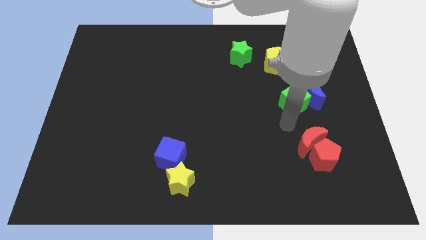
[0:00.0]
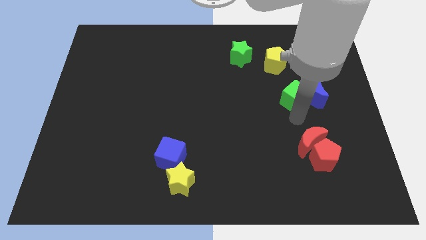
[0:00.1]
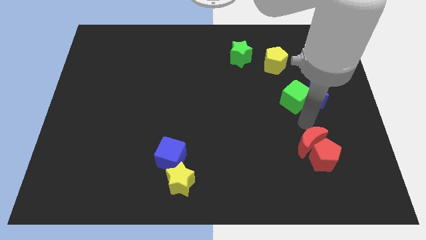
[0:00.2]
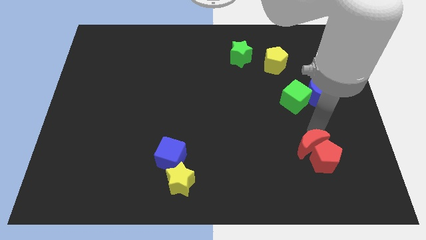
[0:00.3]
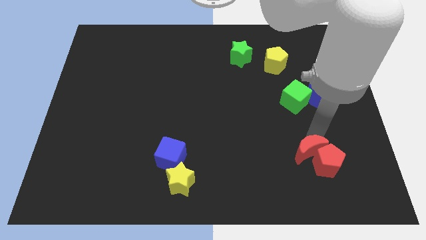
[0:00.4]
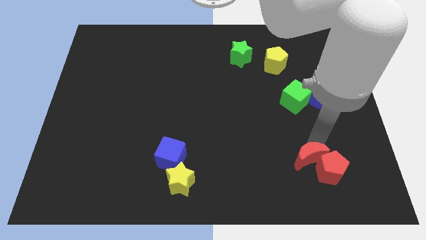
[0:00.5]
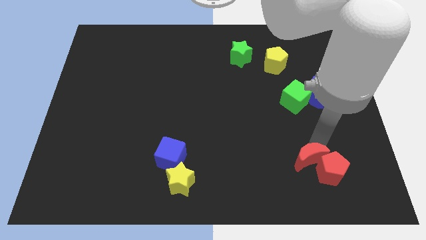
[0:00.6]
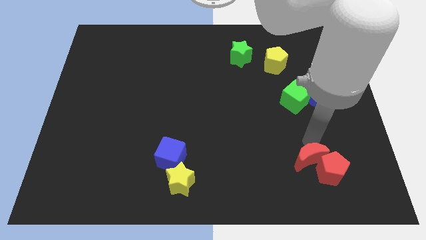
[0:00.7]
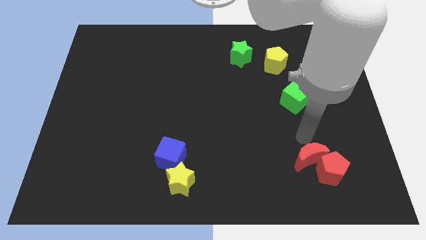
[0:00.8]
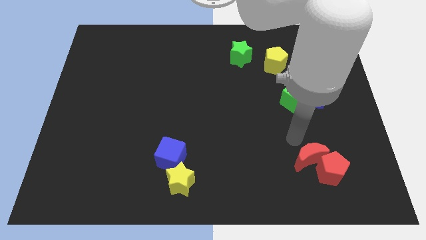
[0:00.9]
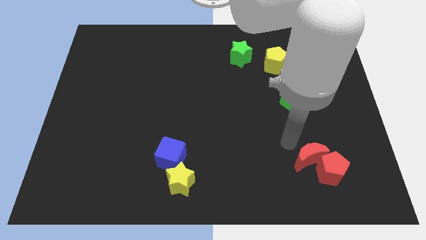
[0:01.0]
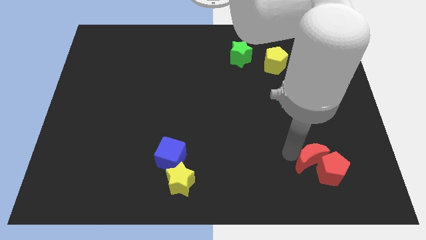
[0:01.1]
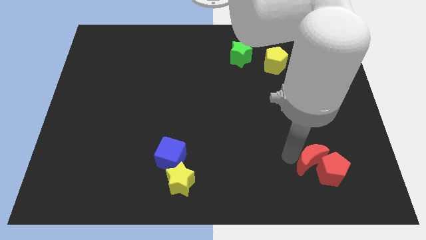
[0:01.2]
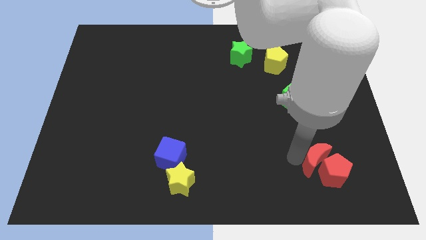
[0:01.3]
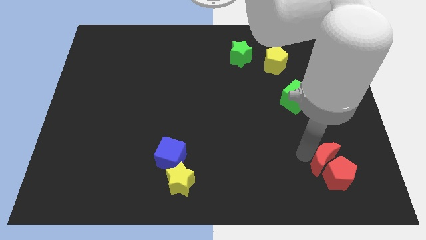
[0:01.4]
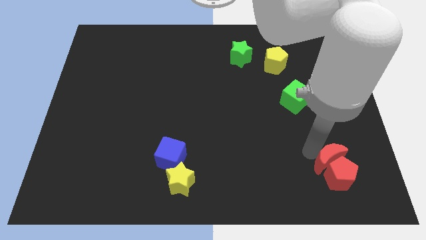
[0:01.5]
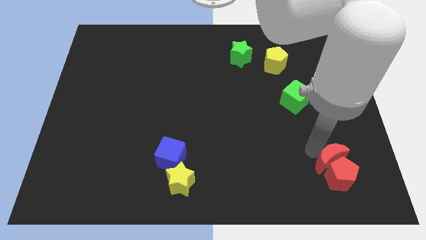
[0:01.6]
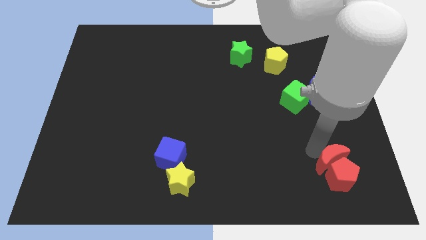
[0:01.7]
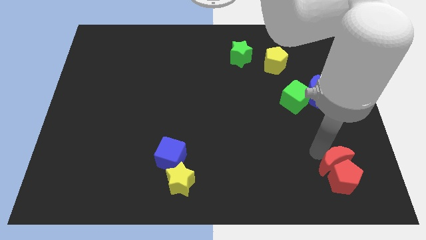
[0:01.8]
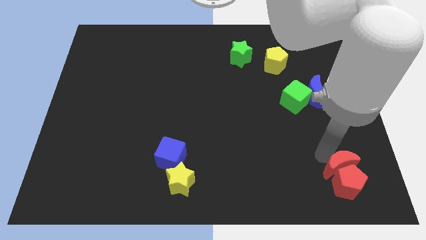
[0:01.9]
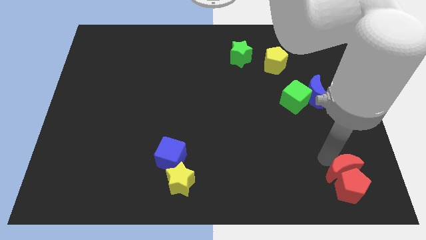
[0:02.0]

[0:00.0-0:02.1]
slide the red blocks to the bottom right of the board

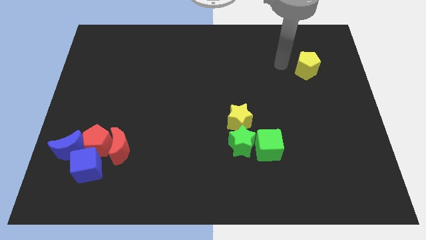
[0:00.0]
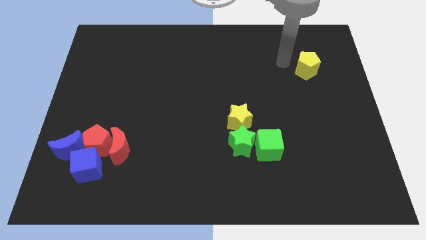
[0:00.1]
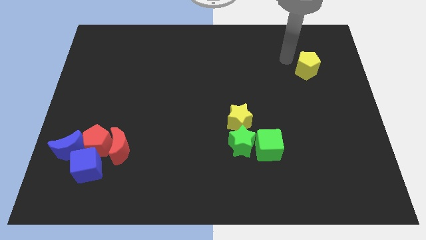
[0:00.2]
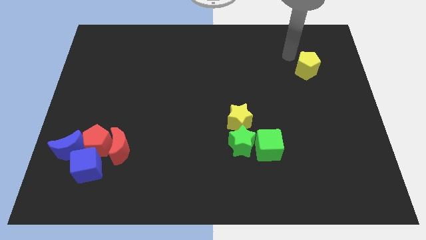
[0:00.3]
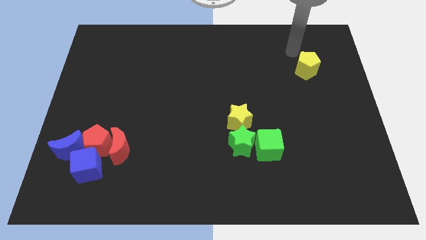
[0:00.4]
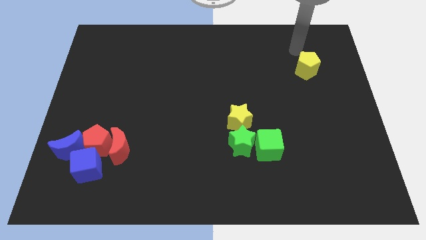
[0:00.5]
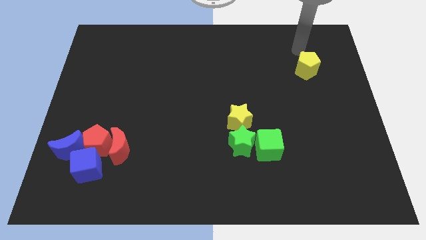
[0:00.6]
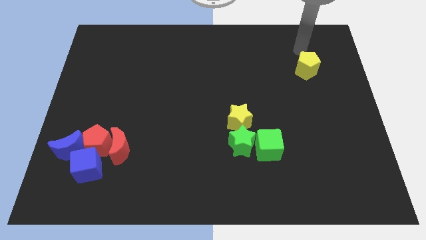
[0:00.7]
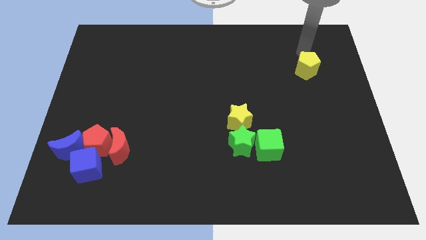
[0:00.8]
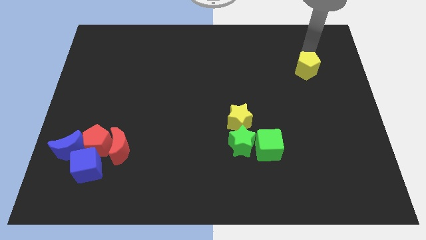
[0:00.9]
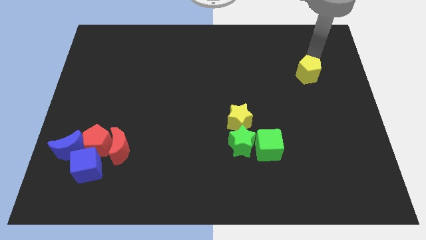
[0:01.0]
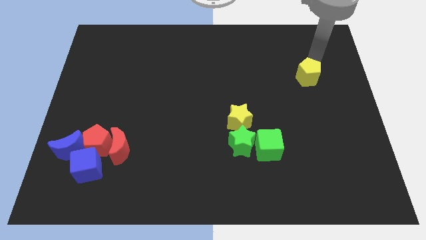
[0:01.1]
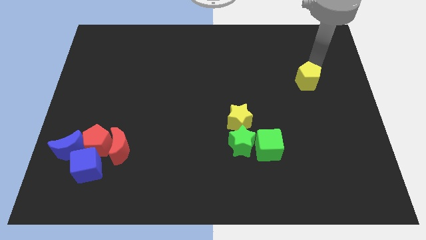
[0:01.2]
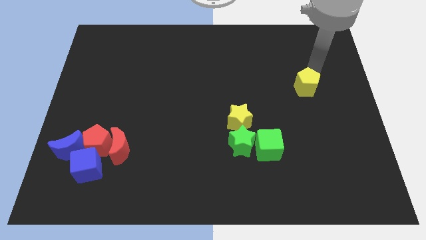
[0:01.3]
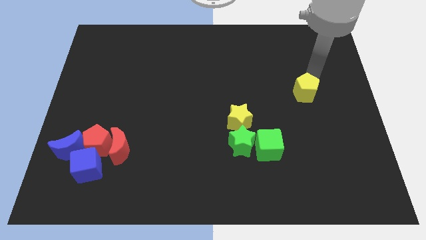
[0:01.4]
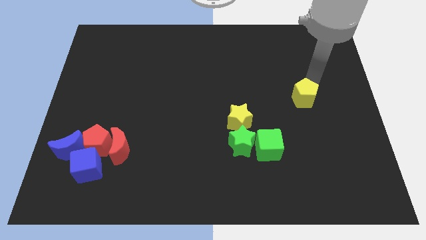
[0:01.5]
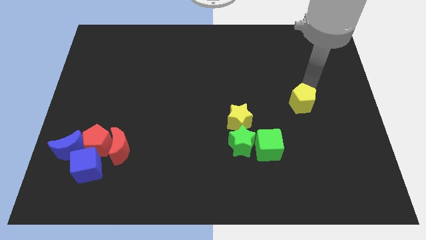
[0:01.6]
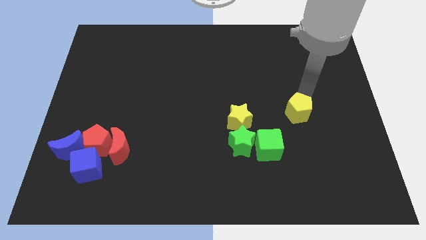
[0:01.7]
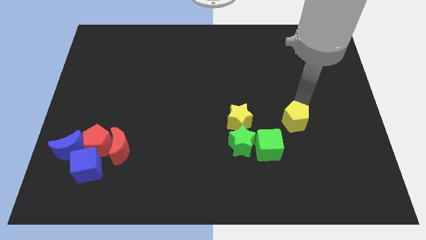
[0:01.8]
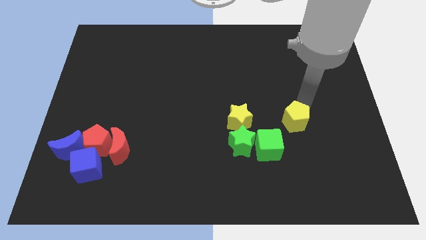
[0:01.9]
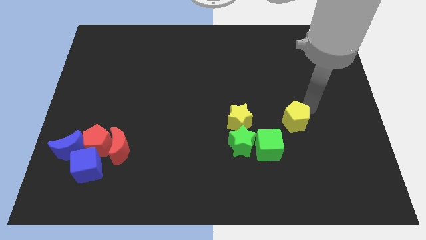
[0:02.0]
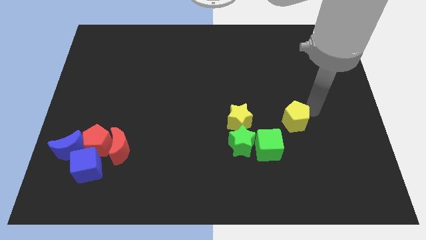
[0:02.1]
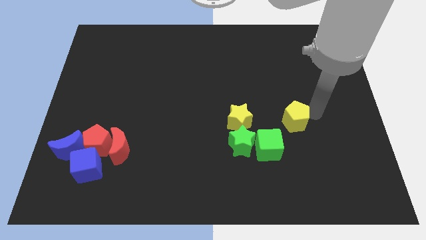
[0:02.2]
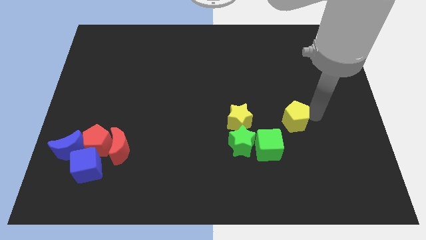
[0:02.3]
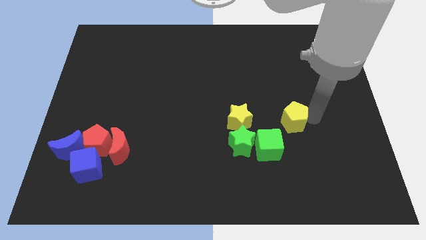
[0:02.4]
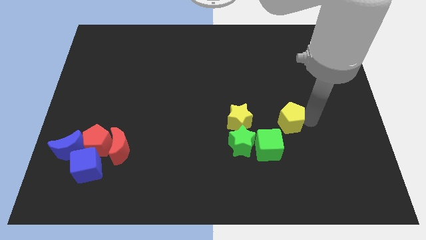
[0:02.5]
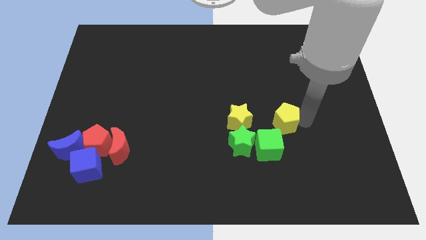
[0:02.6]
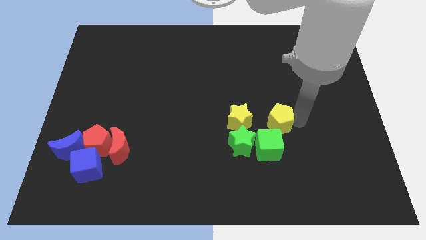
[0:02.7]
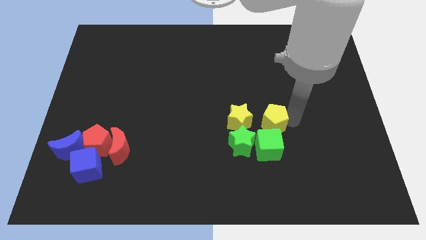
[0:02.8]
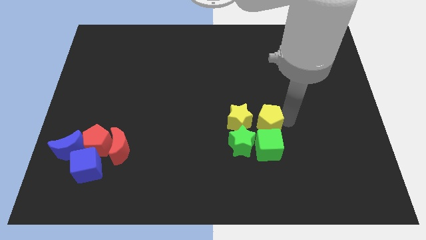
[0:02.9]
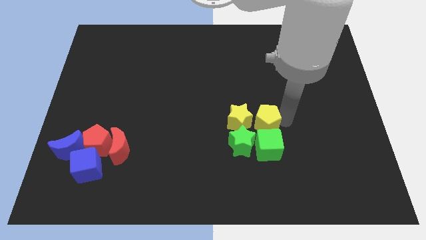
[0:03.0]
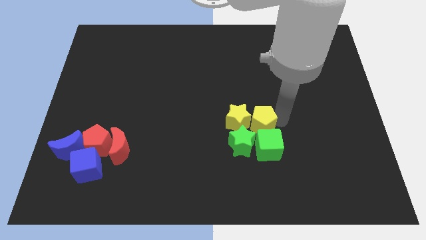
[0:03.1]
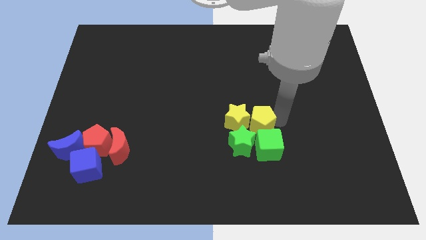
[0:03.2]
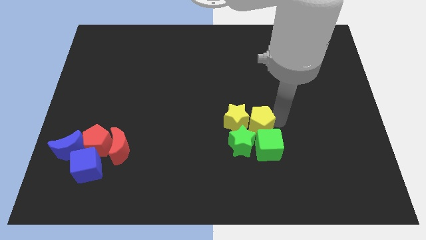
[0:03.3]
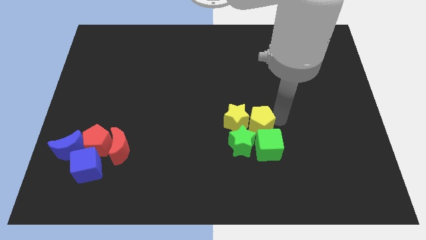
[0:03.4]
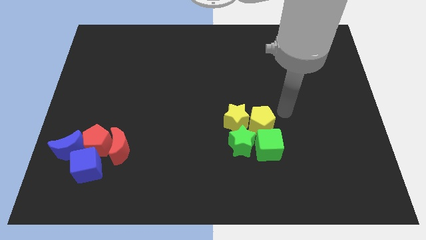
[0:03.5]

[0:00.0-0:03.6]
push the yellow pentagon into the yellow star

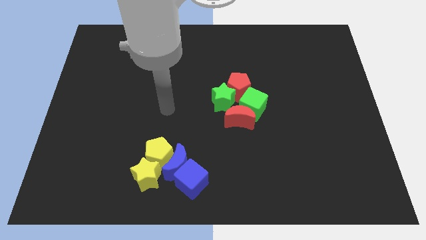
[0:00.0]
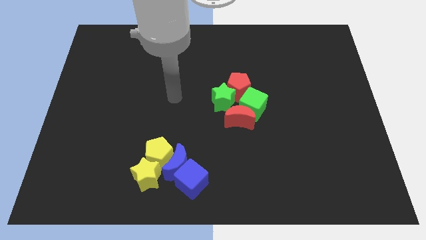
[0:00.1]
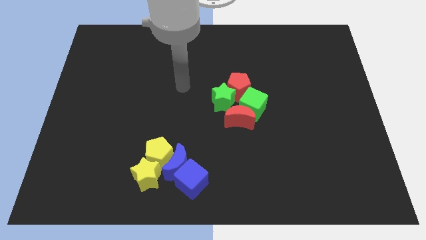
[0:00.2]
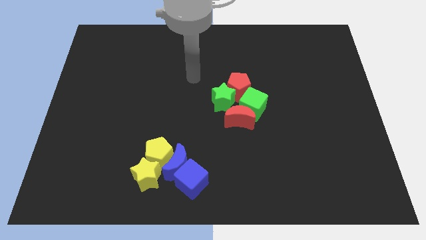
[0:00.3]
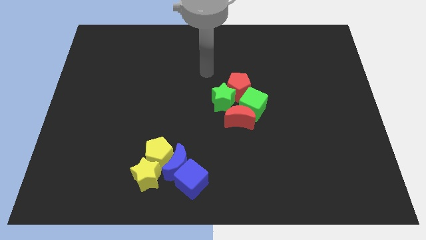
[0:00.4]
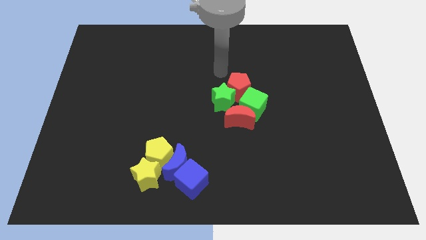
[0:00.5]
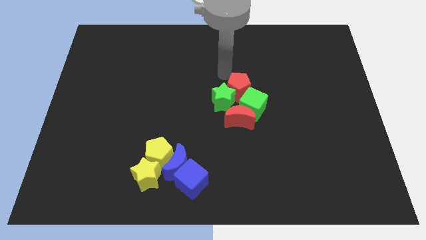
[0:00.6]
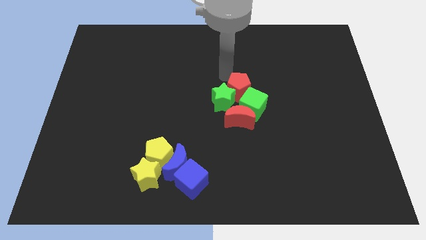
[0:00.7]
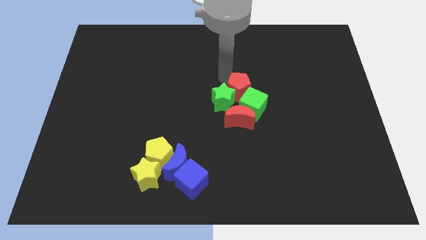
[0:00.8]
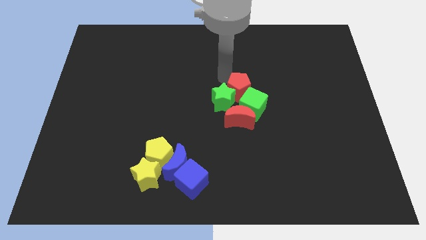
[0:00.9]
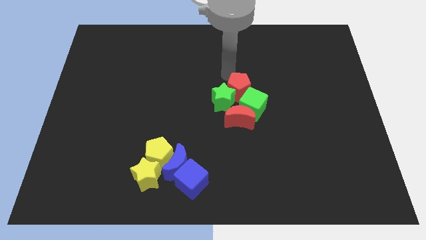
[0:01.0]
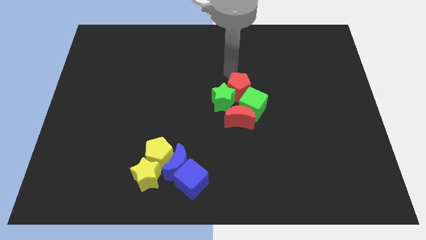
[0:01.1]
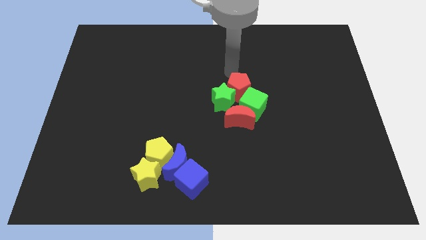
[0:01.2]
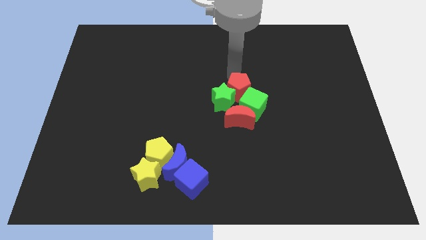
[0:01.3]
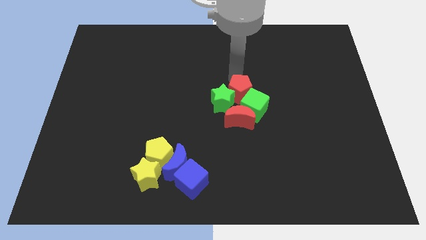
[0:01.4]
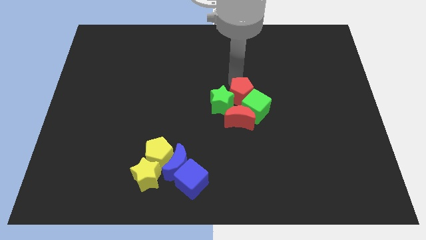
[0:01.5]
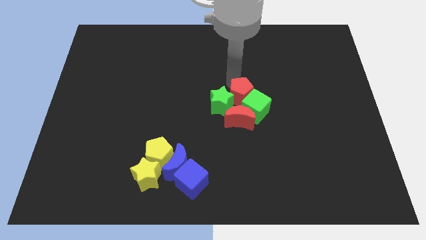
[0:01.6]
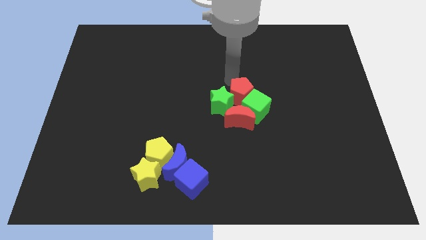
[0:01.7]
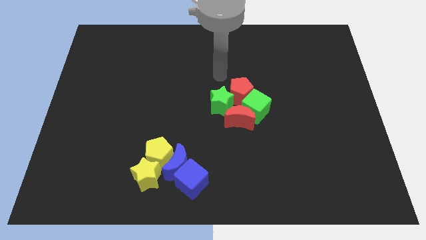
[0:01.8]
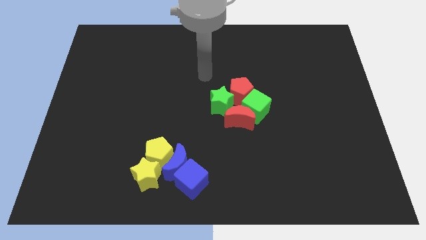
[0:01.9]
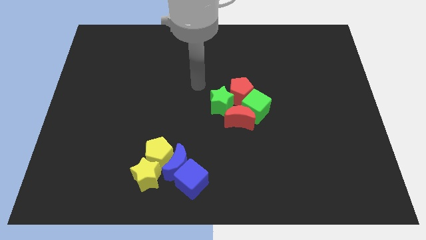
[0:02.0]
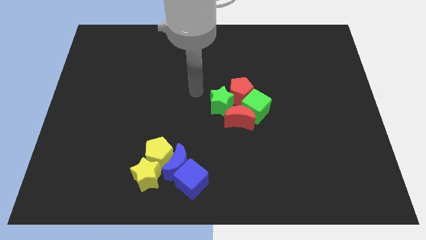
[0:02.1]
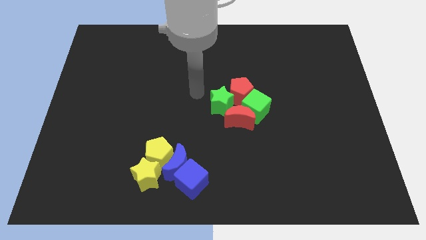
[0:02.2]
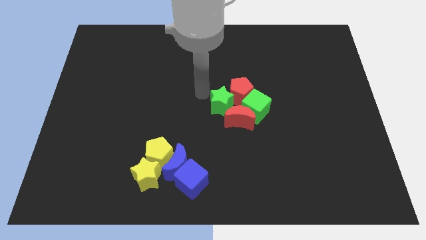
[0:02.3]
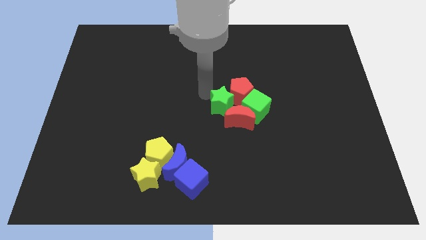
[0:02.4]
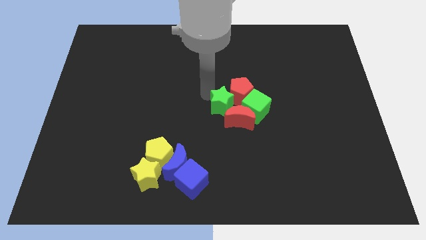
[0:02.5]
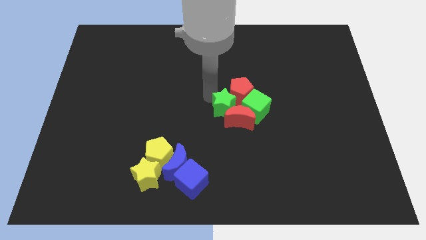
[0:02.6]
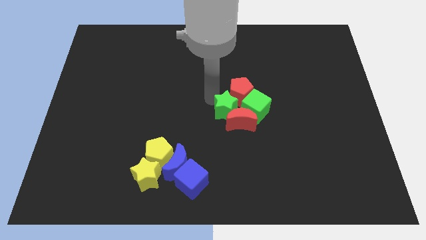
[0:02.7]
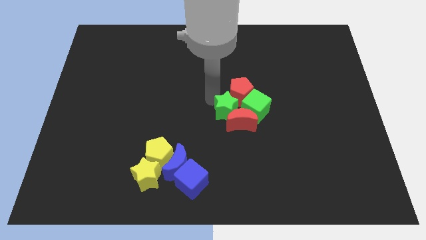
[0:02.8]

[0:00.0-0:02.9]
slightly push the red pentagon into the group of blocks

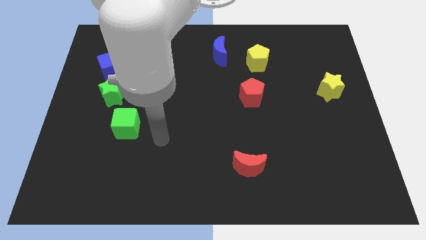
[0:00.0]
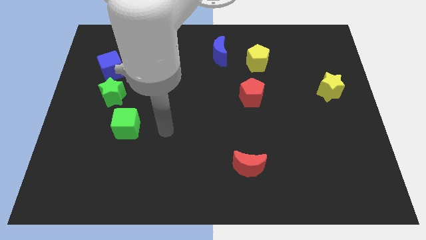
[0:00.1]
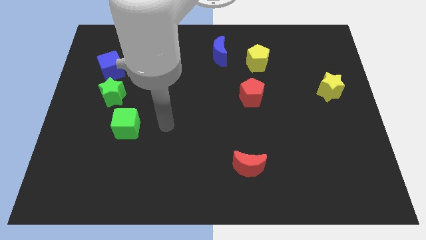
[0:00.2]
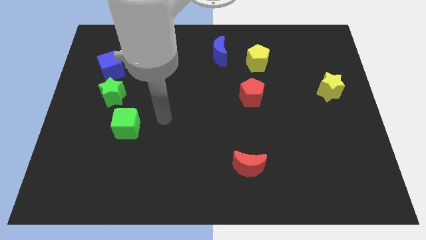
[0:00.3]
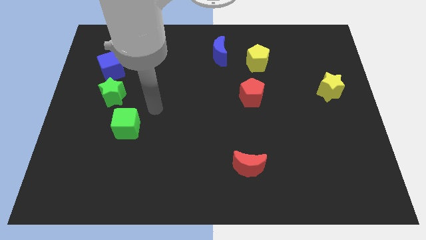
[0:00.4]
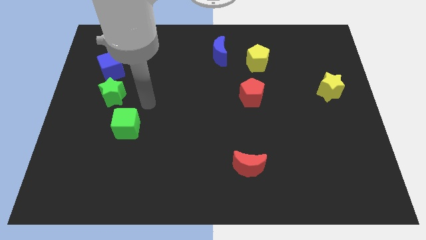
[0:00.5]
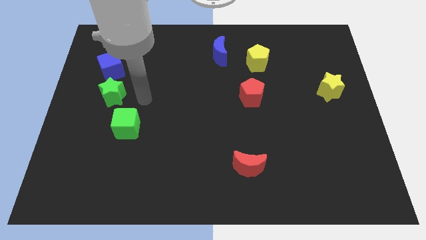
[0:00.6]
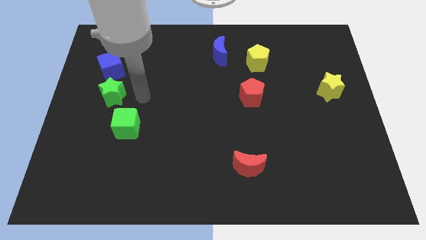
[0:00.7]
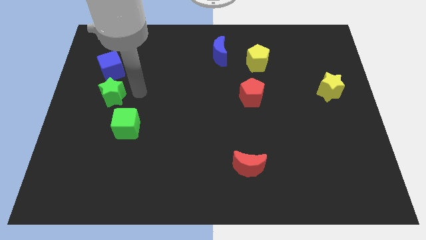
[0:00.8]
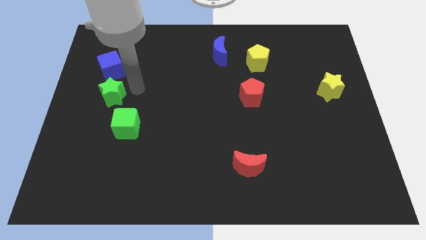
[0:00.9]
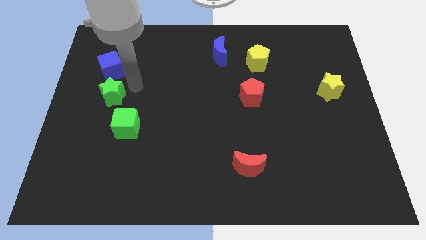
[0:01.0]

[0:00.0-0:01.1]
put arm right to green star
